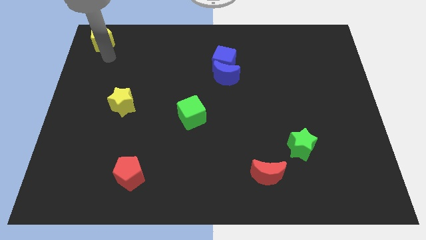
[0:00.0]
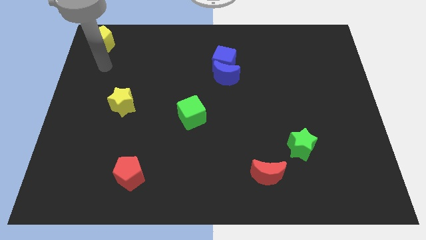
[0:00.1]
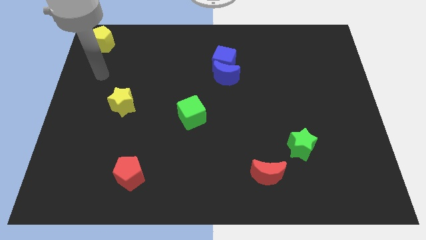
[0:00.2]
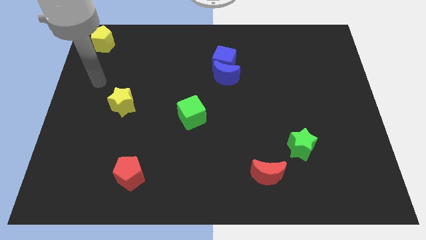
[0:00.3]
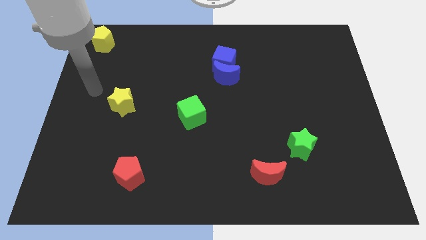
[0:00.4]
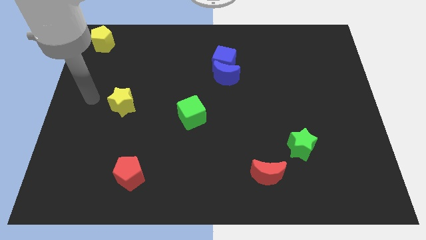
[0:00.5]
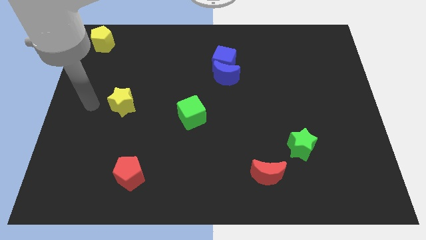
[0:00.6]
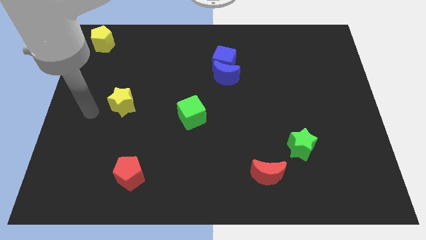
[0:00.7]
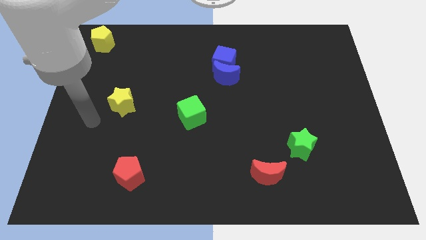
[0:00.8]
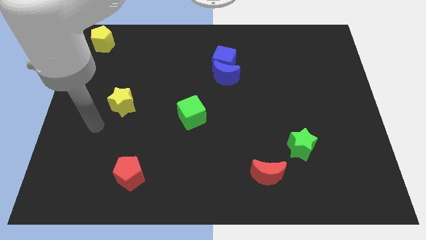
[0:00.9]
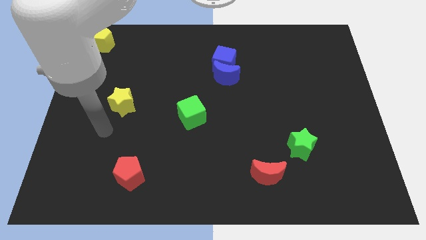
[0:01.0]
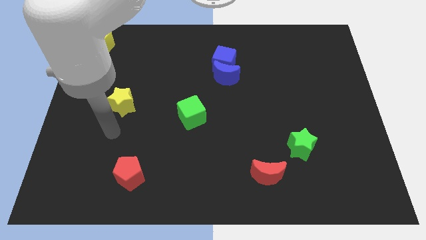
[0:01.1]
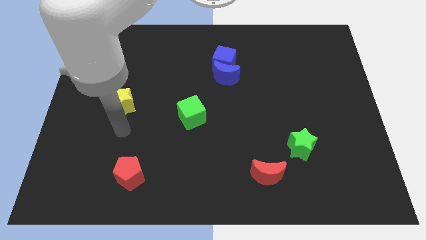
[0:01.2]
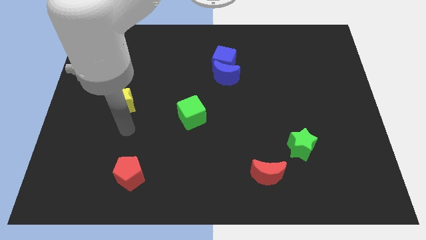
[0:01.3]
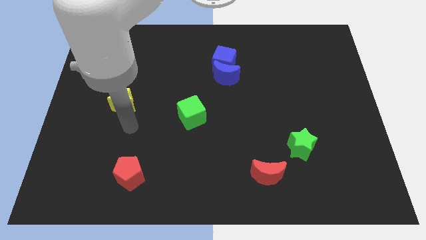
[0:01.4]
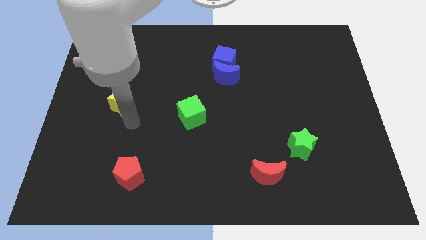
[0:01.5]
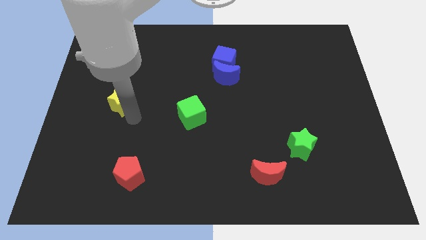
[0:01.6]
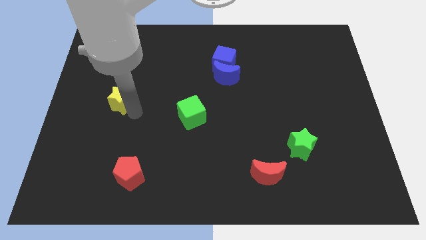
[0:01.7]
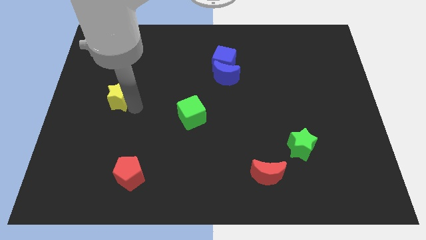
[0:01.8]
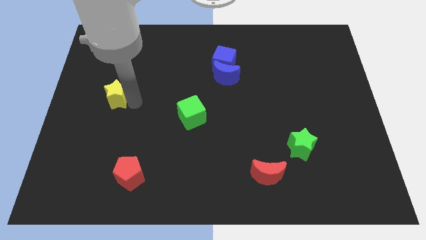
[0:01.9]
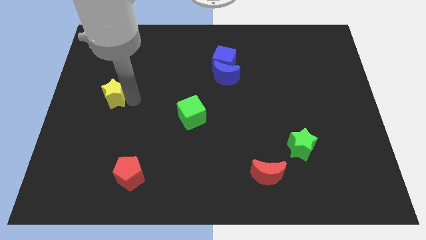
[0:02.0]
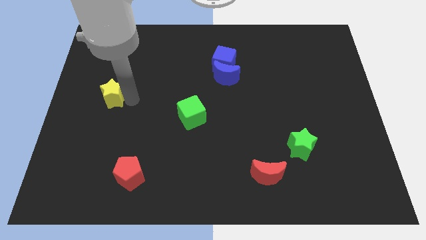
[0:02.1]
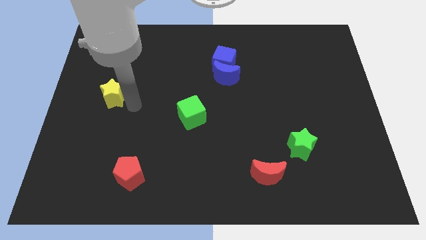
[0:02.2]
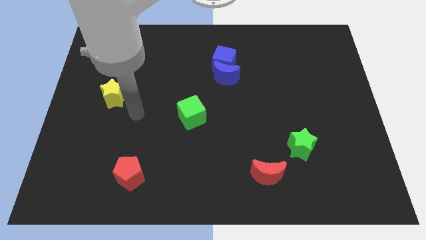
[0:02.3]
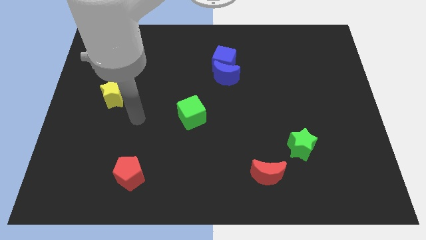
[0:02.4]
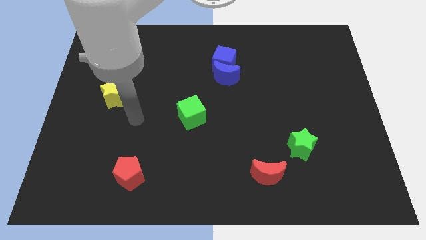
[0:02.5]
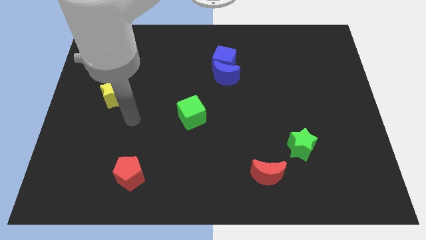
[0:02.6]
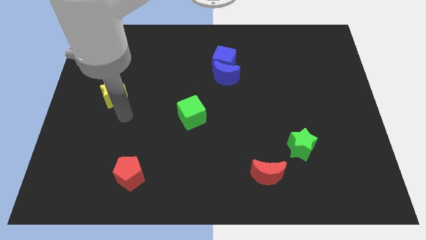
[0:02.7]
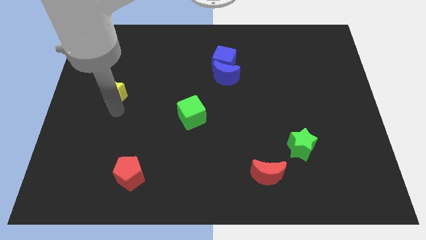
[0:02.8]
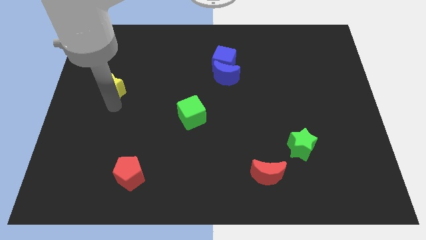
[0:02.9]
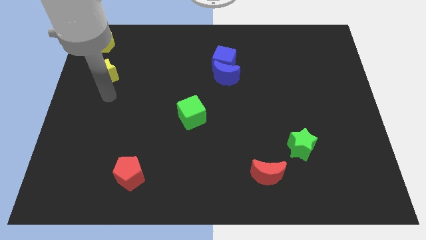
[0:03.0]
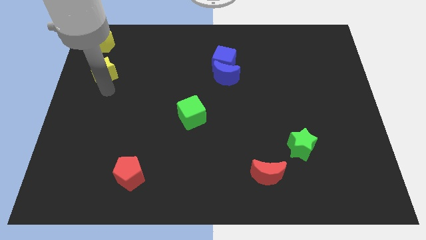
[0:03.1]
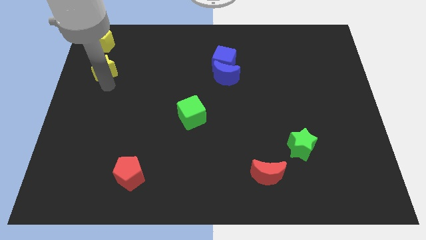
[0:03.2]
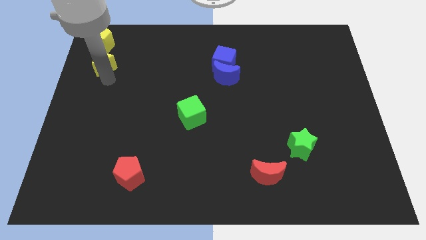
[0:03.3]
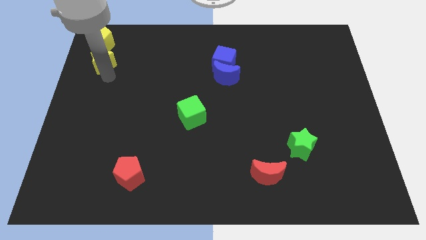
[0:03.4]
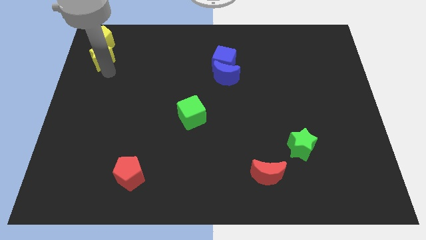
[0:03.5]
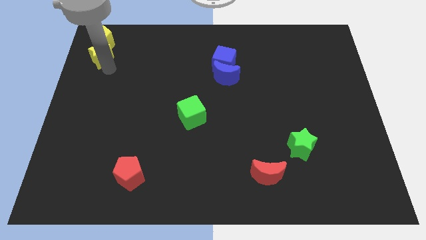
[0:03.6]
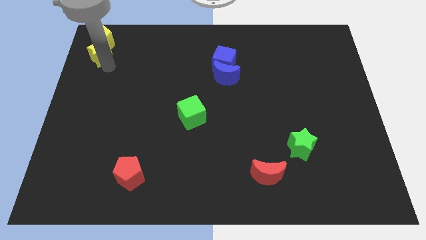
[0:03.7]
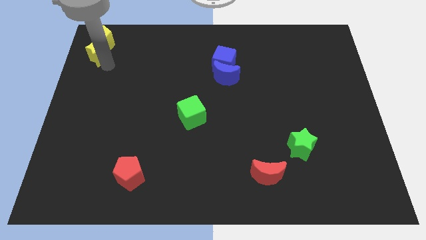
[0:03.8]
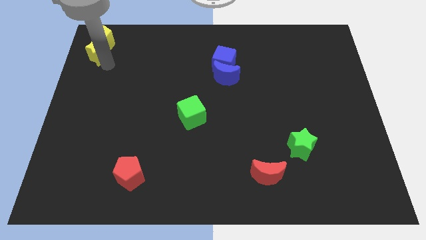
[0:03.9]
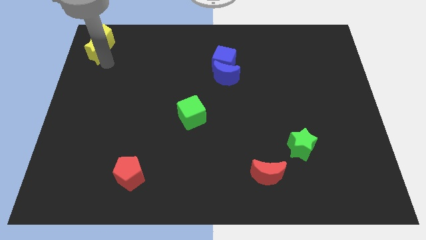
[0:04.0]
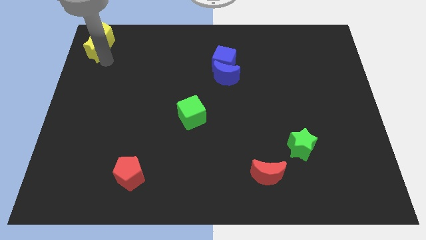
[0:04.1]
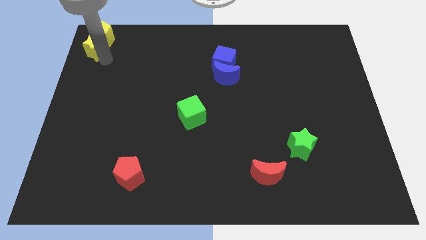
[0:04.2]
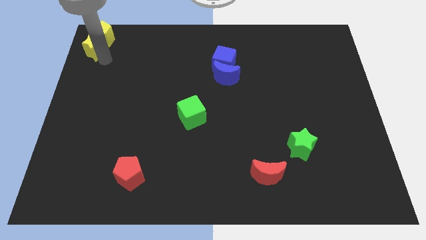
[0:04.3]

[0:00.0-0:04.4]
push the yellow star towards the yellow pentagon

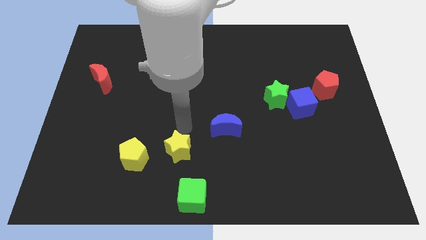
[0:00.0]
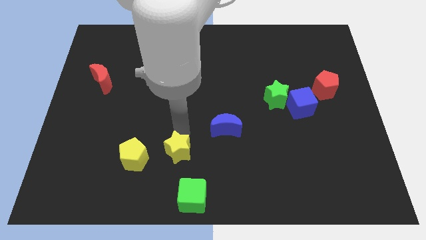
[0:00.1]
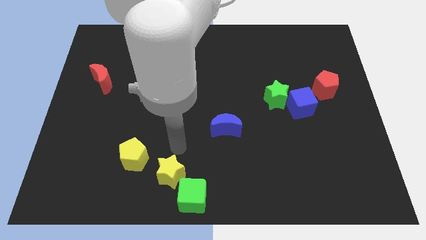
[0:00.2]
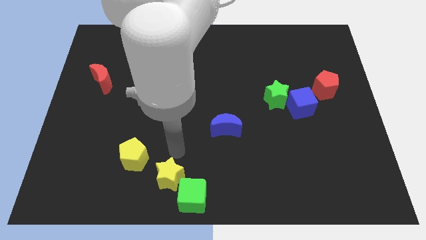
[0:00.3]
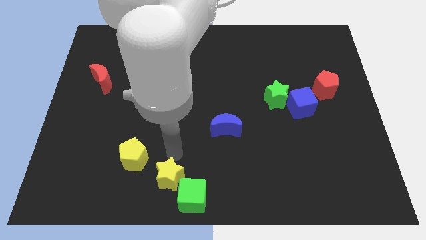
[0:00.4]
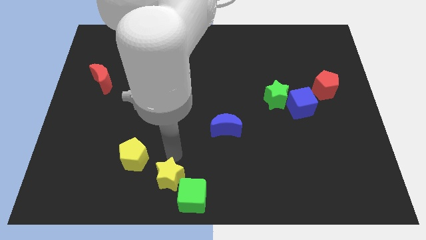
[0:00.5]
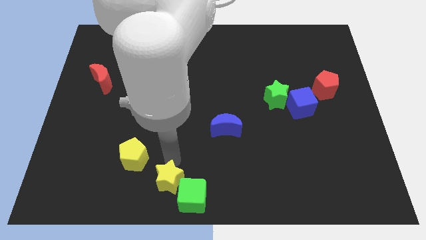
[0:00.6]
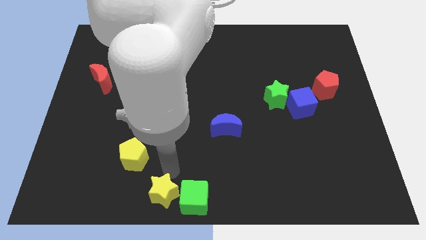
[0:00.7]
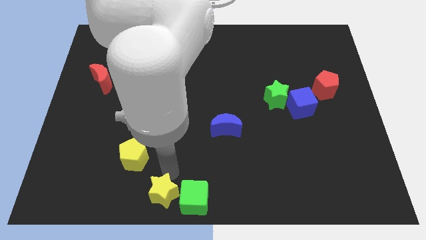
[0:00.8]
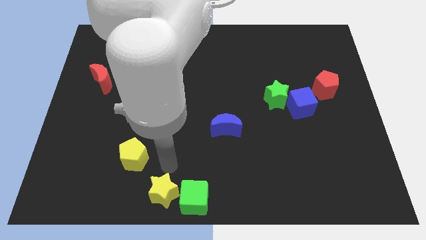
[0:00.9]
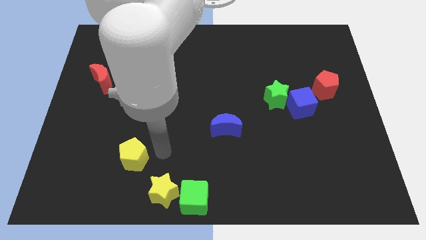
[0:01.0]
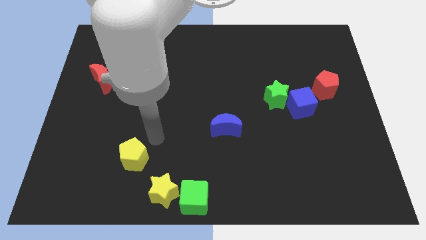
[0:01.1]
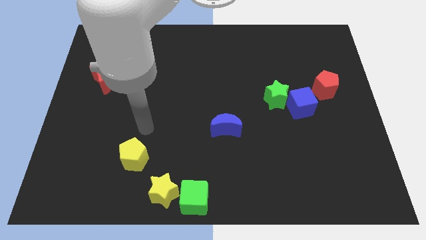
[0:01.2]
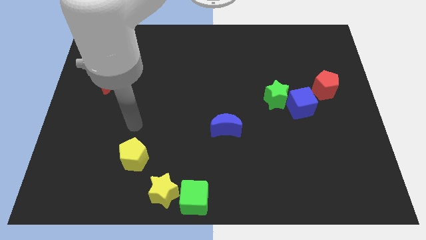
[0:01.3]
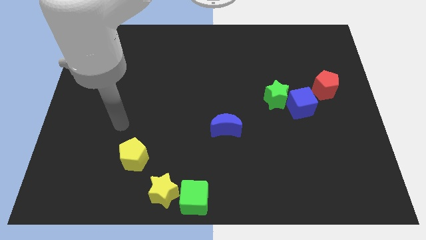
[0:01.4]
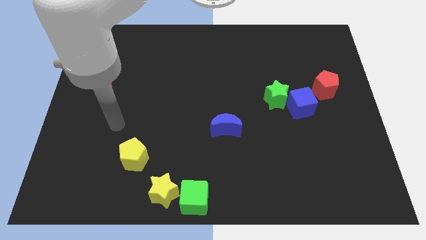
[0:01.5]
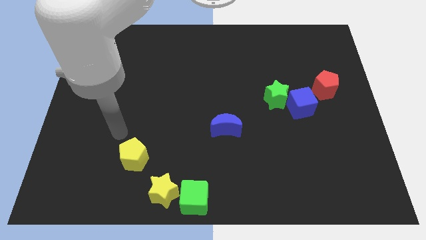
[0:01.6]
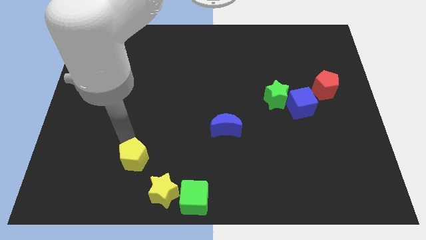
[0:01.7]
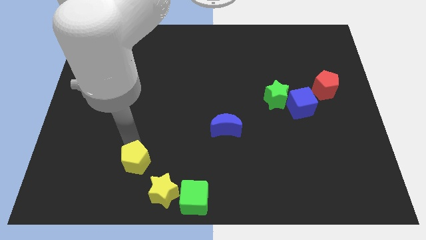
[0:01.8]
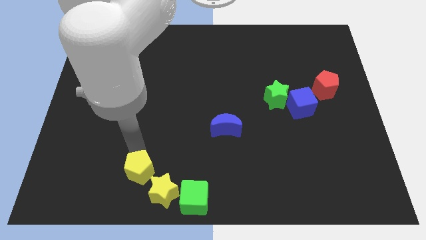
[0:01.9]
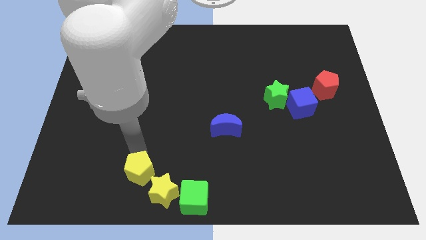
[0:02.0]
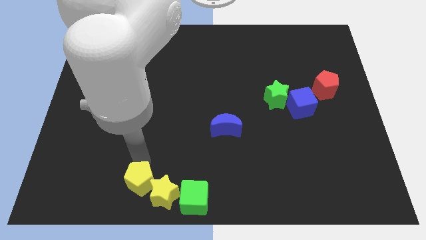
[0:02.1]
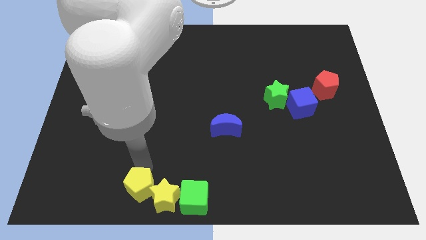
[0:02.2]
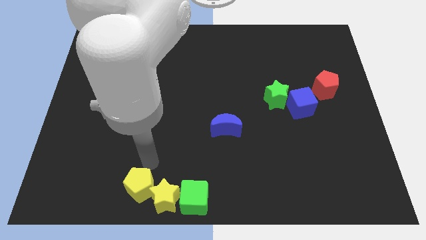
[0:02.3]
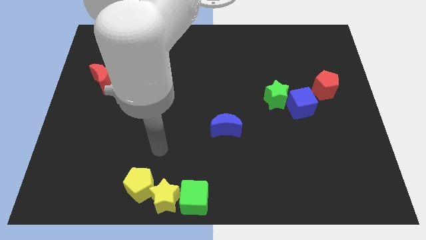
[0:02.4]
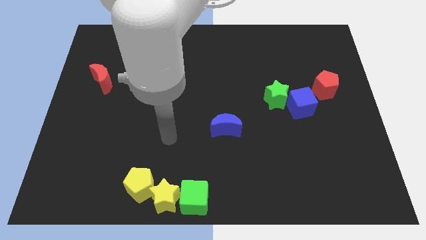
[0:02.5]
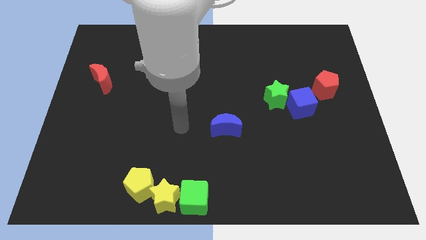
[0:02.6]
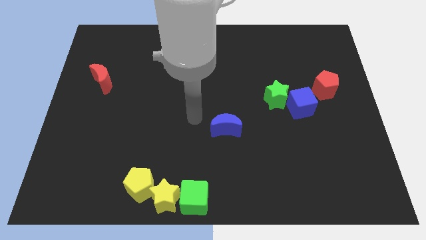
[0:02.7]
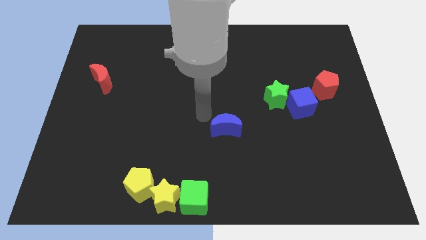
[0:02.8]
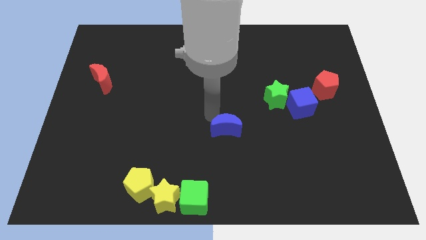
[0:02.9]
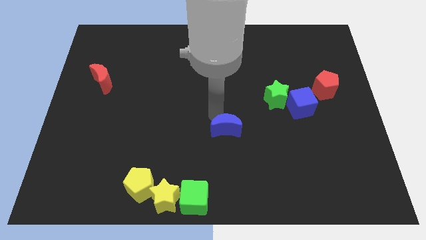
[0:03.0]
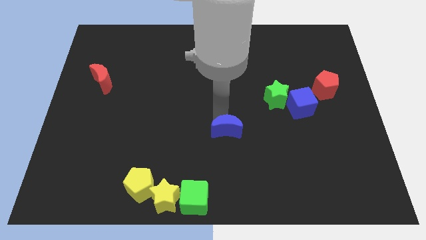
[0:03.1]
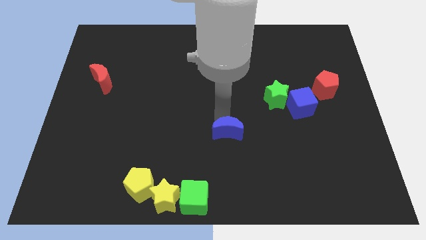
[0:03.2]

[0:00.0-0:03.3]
slide the yellow pentagon into the yellow star

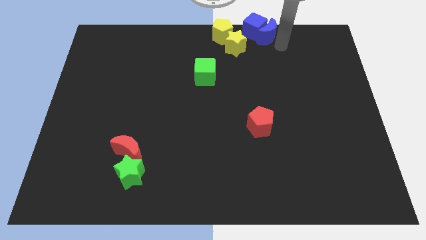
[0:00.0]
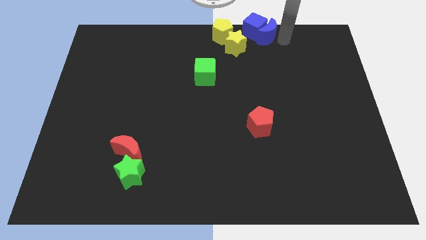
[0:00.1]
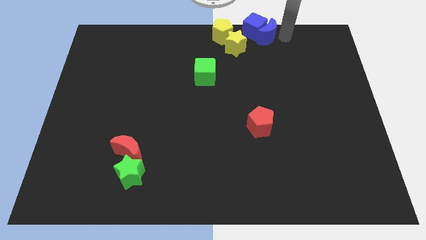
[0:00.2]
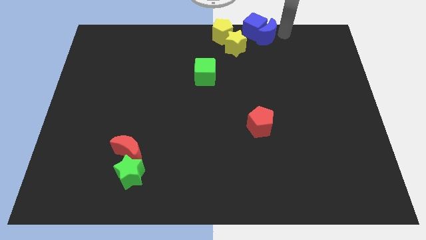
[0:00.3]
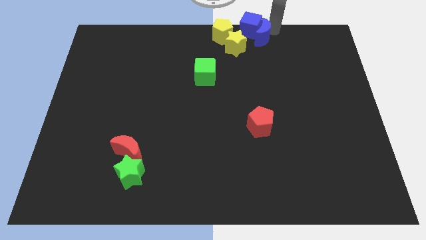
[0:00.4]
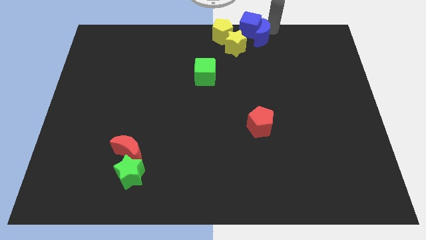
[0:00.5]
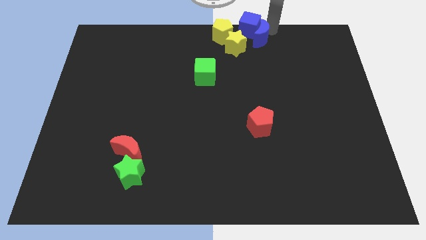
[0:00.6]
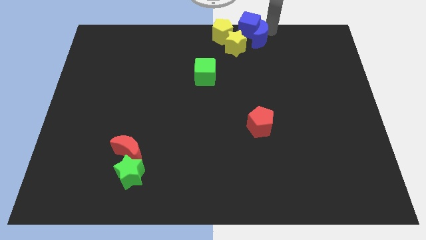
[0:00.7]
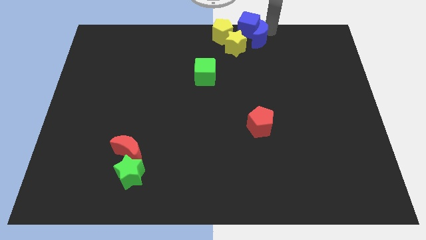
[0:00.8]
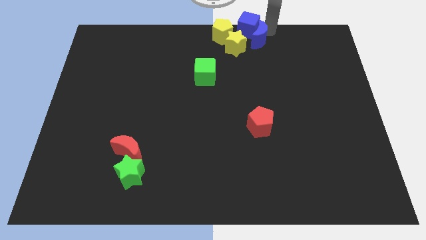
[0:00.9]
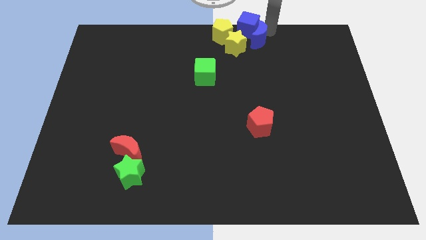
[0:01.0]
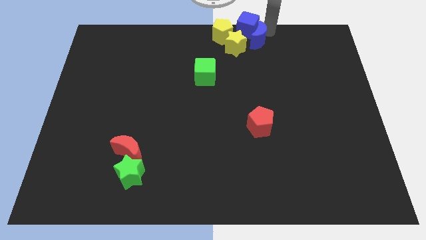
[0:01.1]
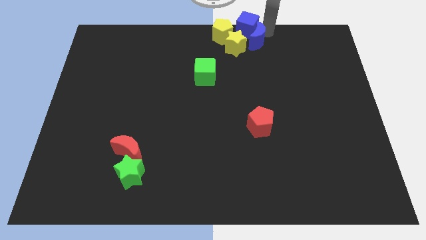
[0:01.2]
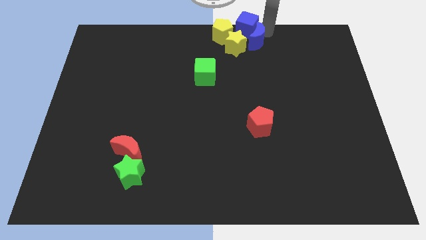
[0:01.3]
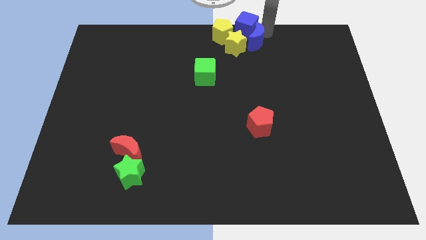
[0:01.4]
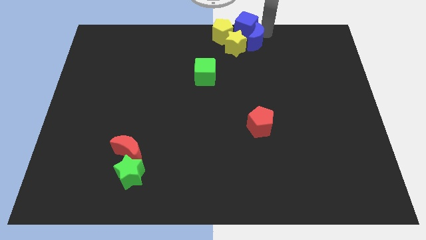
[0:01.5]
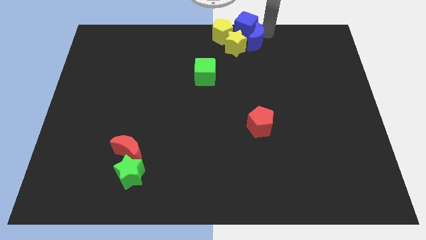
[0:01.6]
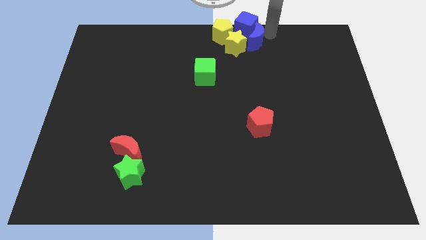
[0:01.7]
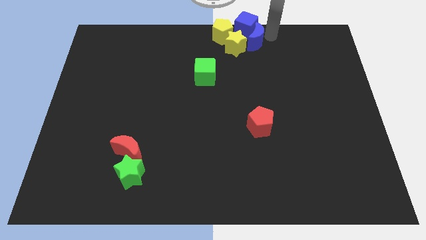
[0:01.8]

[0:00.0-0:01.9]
push the blue crescent towards the yellow star
